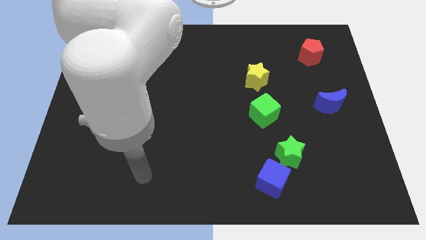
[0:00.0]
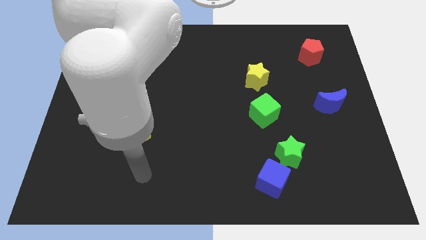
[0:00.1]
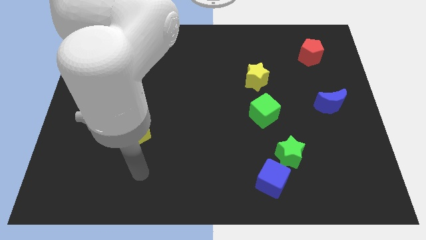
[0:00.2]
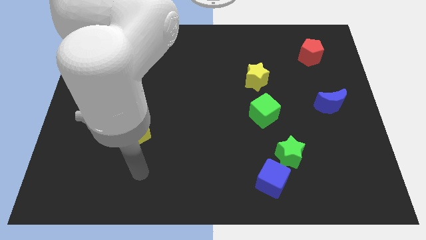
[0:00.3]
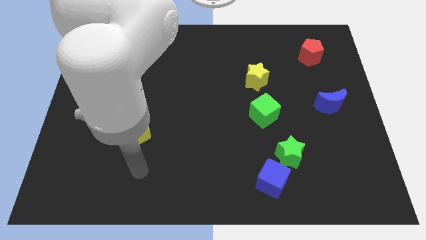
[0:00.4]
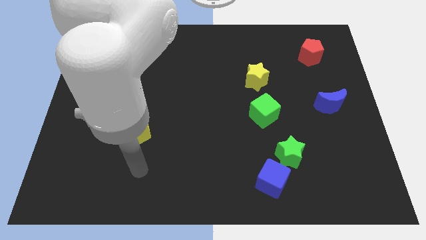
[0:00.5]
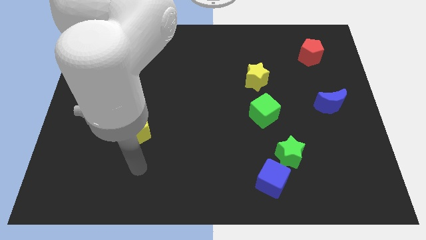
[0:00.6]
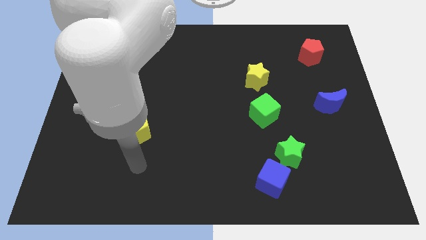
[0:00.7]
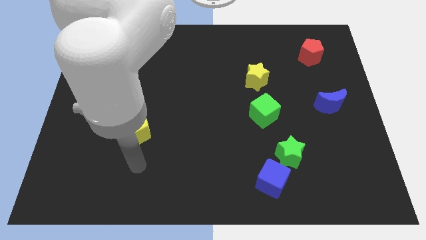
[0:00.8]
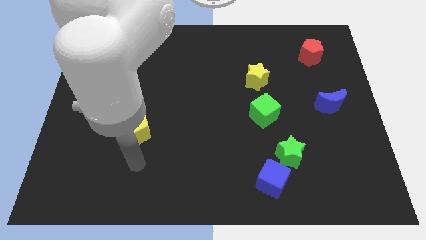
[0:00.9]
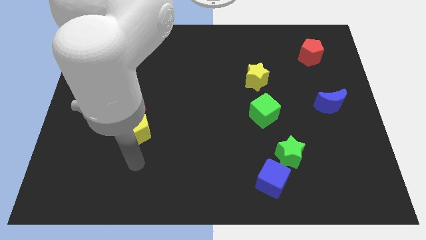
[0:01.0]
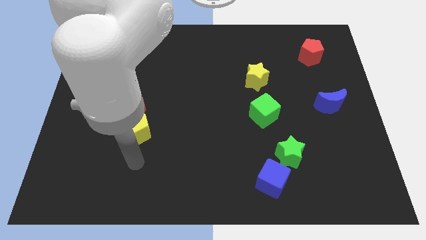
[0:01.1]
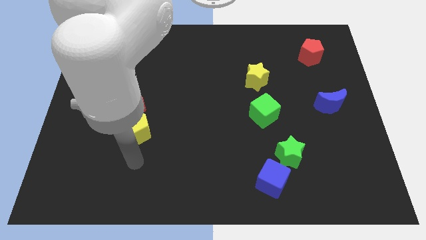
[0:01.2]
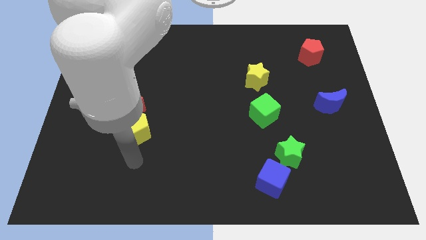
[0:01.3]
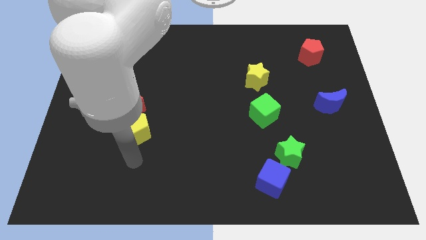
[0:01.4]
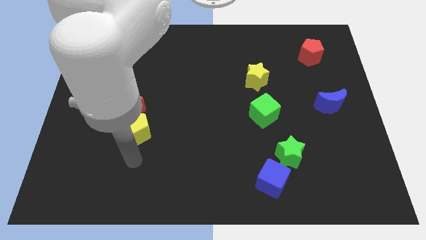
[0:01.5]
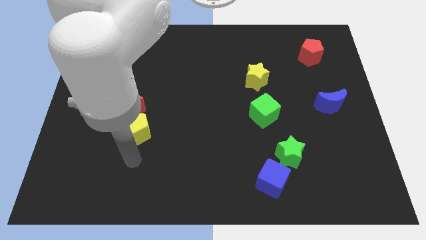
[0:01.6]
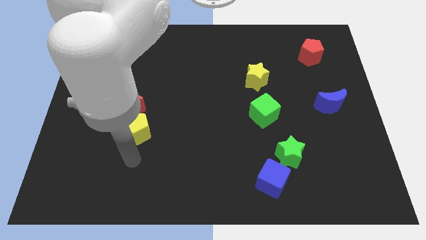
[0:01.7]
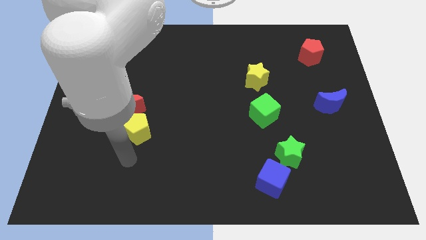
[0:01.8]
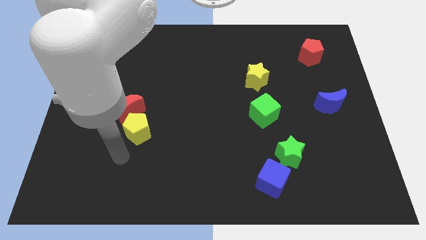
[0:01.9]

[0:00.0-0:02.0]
move the arm towards the yellow pentagon

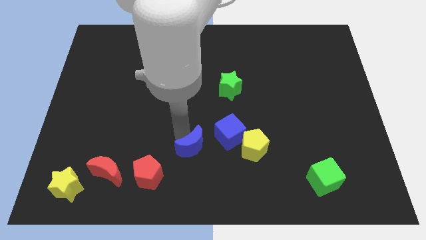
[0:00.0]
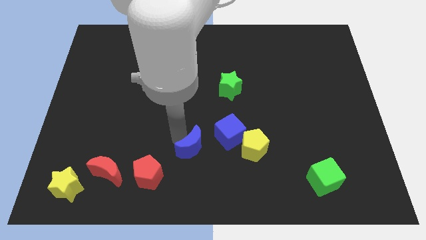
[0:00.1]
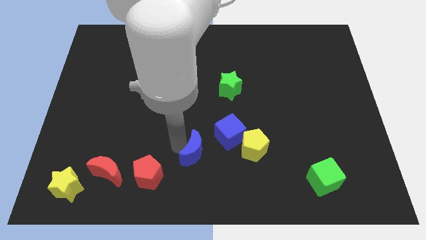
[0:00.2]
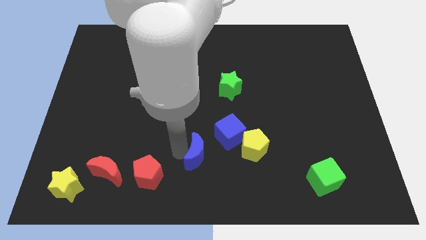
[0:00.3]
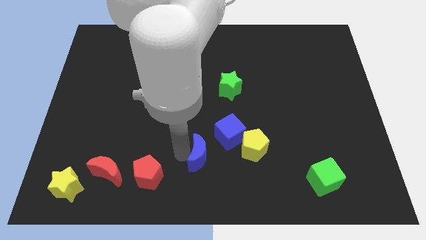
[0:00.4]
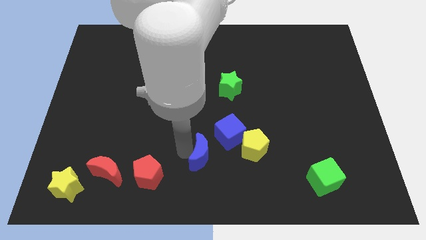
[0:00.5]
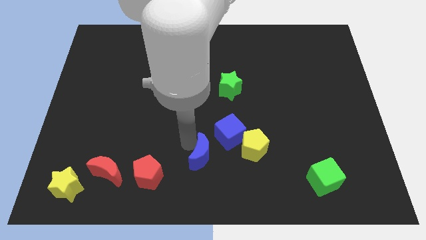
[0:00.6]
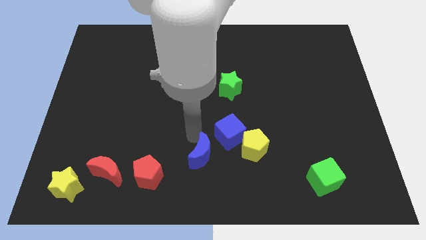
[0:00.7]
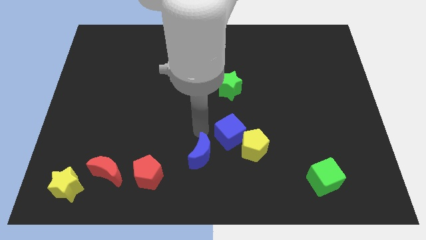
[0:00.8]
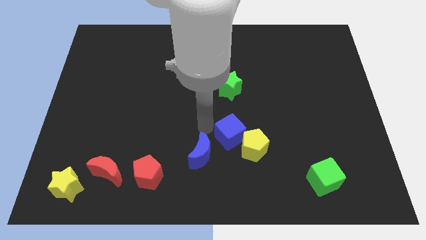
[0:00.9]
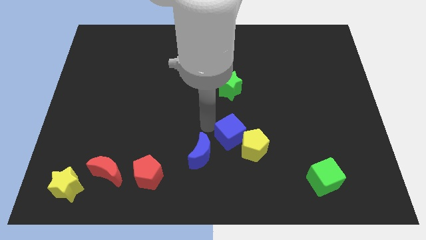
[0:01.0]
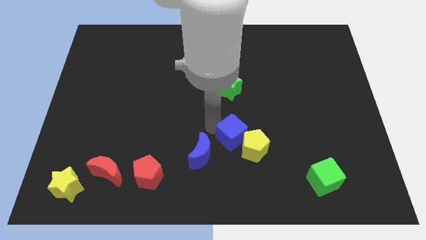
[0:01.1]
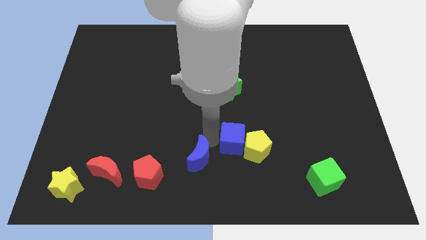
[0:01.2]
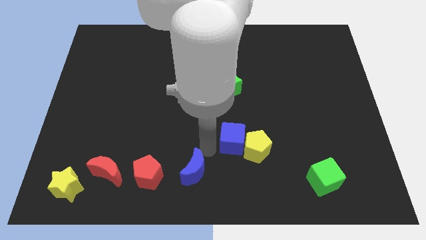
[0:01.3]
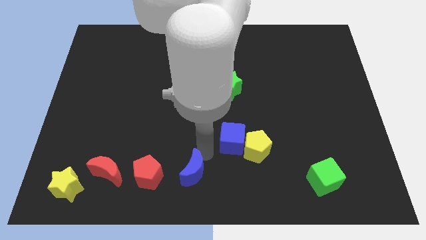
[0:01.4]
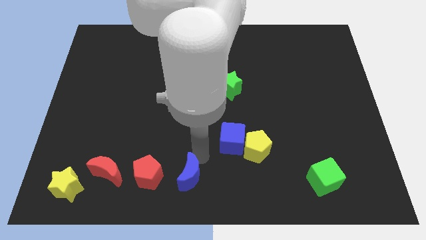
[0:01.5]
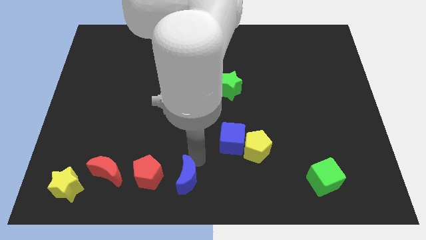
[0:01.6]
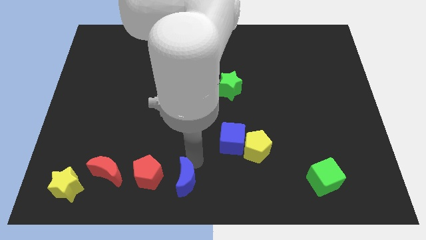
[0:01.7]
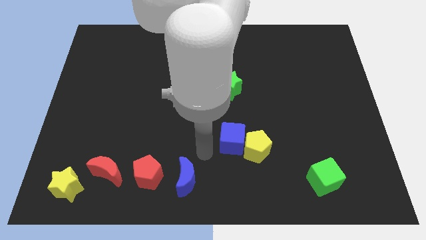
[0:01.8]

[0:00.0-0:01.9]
move the blue moon right to the red pentagon

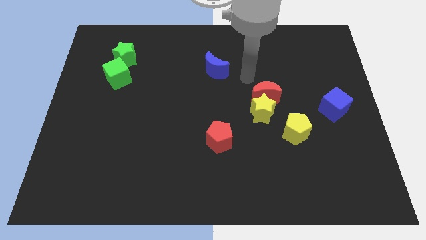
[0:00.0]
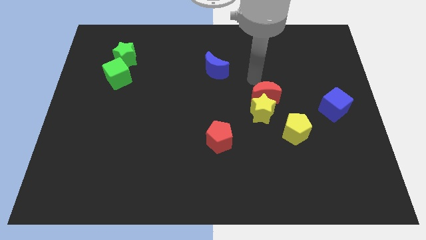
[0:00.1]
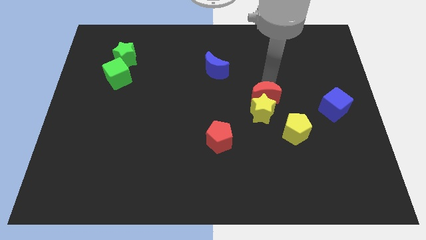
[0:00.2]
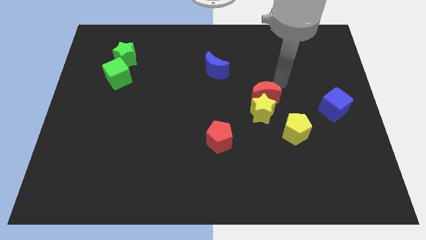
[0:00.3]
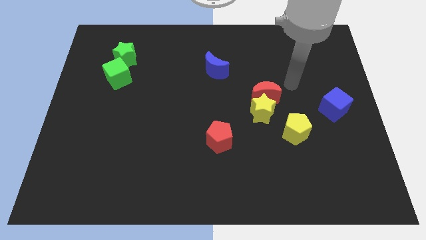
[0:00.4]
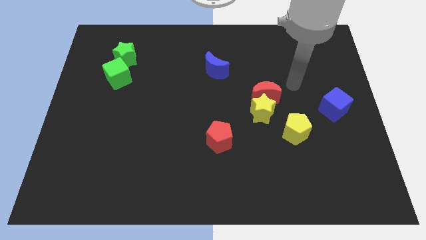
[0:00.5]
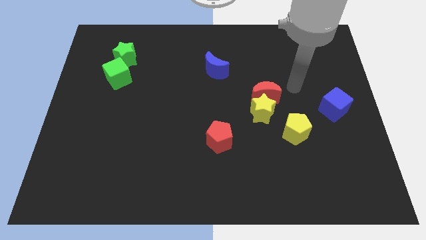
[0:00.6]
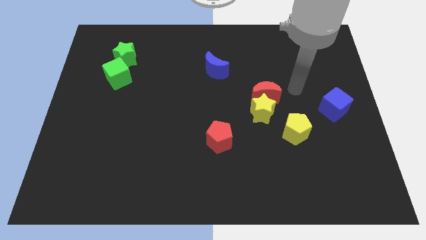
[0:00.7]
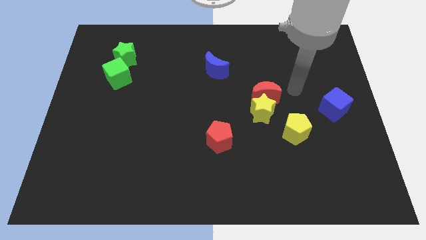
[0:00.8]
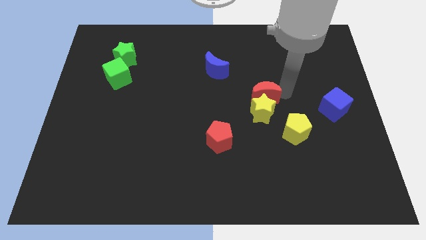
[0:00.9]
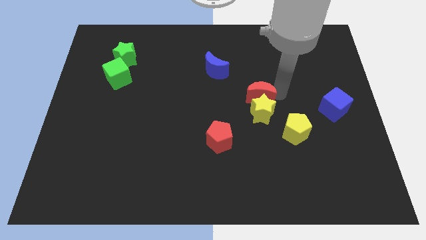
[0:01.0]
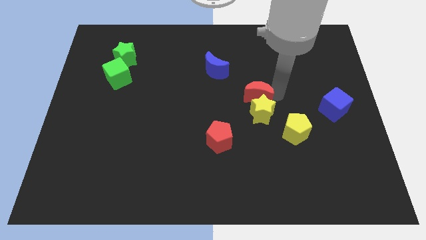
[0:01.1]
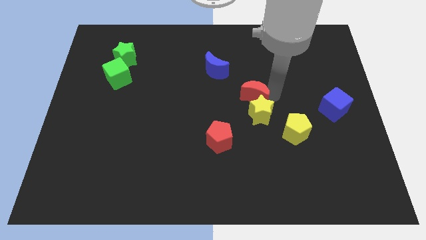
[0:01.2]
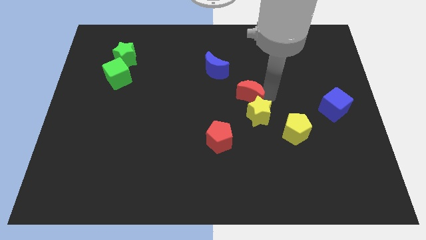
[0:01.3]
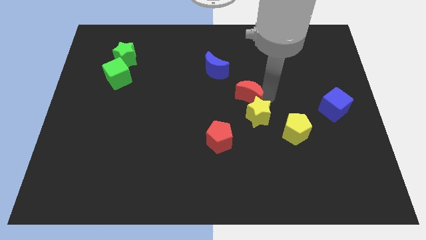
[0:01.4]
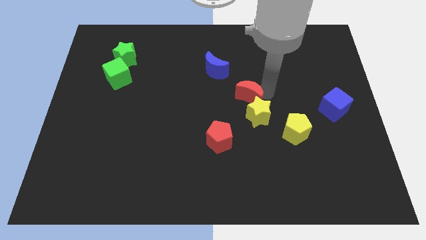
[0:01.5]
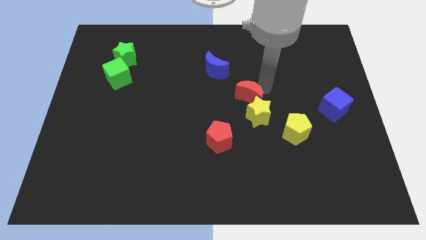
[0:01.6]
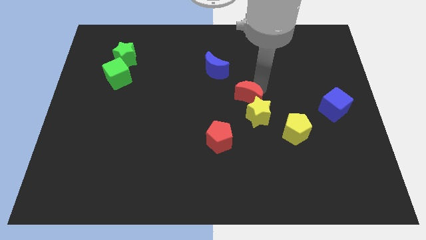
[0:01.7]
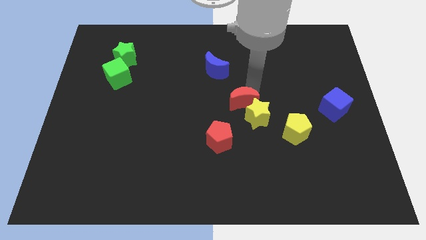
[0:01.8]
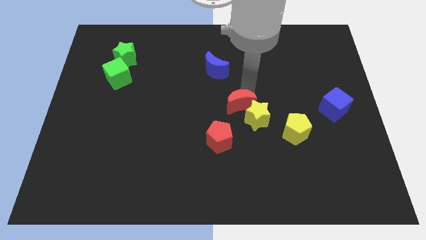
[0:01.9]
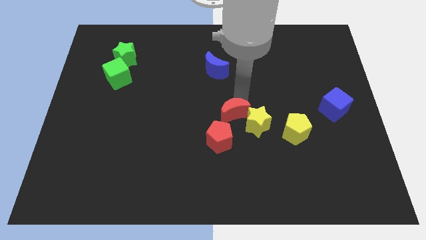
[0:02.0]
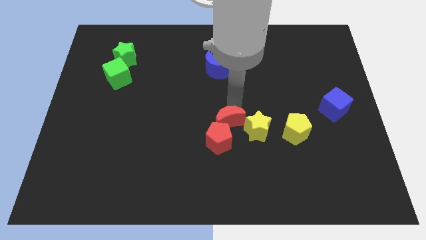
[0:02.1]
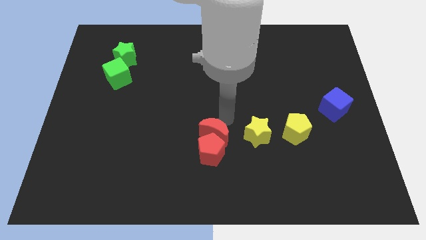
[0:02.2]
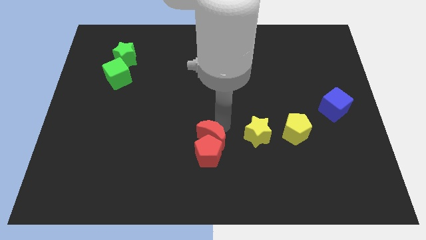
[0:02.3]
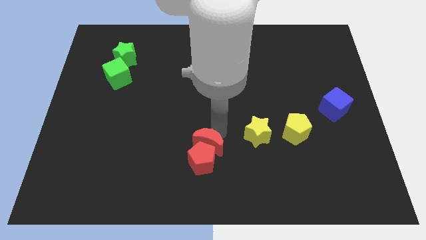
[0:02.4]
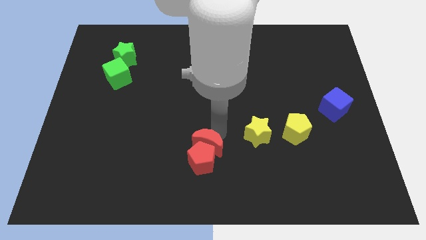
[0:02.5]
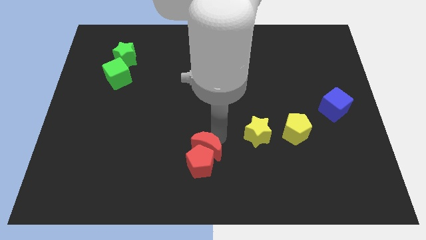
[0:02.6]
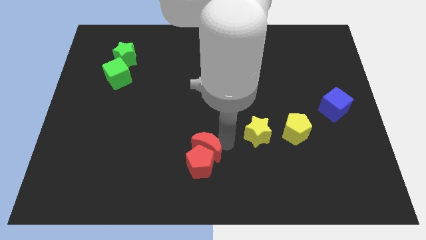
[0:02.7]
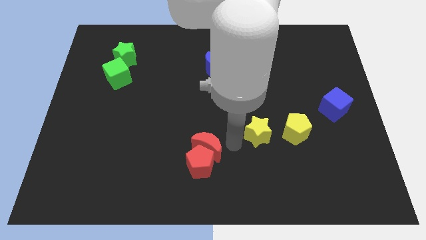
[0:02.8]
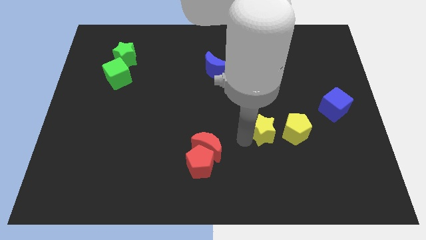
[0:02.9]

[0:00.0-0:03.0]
slightly push the red blocks towards down

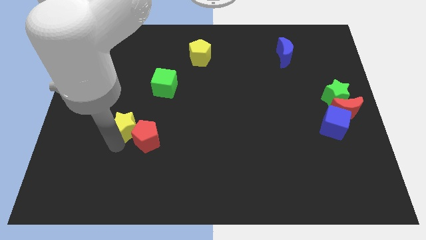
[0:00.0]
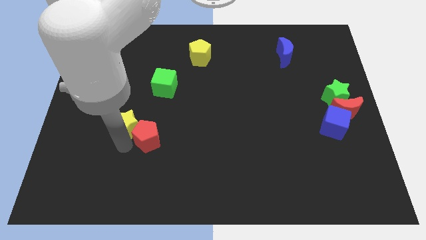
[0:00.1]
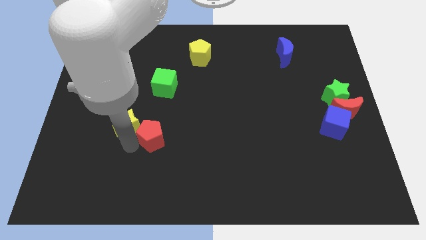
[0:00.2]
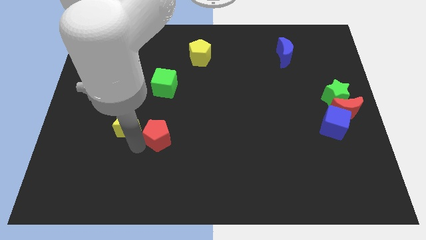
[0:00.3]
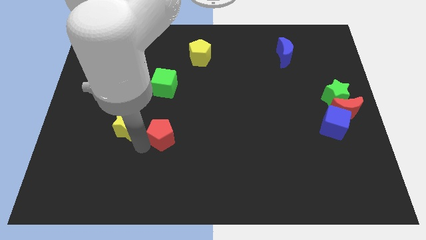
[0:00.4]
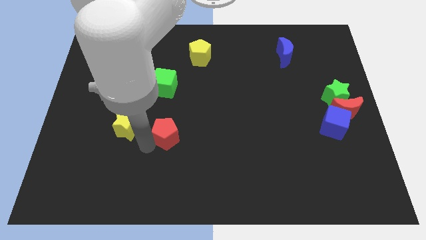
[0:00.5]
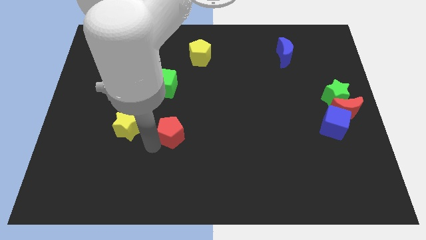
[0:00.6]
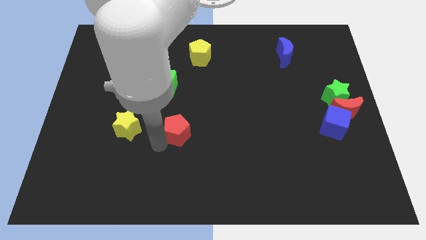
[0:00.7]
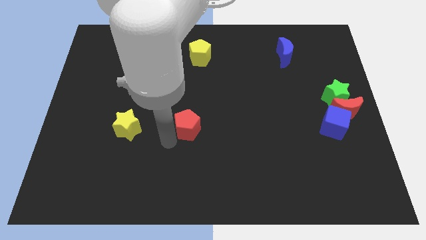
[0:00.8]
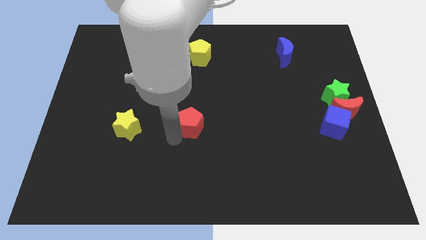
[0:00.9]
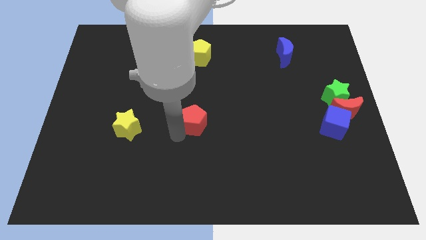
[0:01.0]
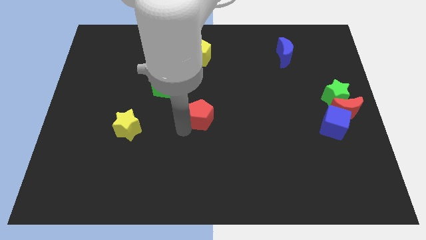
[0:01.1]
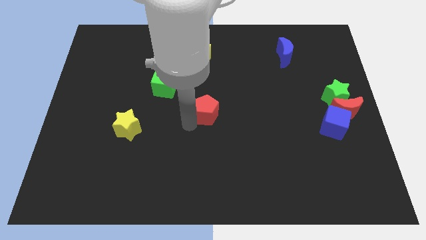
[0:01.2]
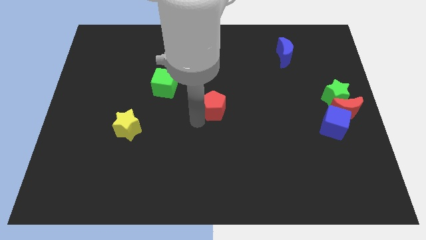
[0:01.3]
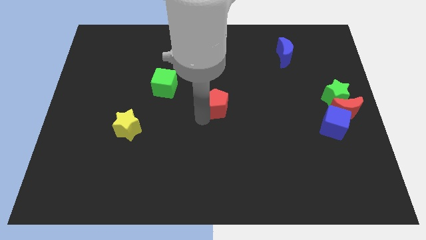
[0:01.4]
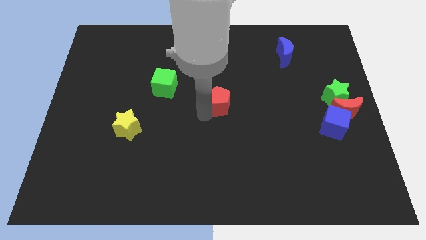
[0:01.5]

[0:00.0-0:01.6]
separate the red pentagon from the yellow star

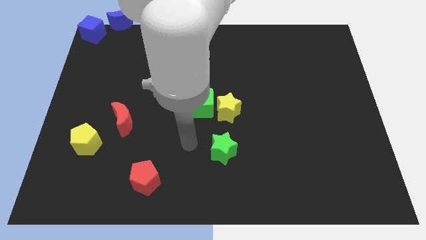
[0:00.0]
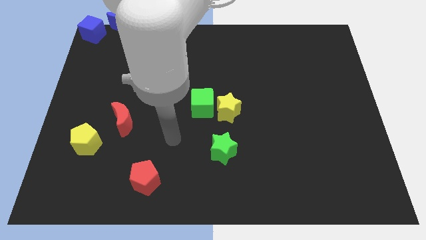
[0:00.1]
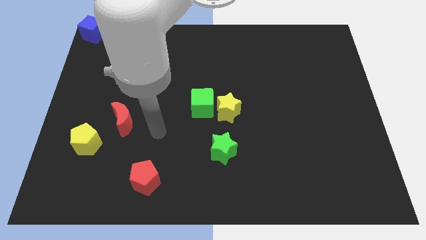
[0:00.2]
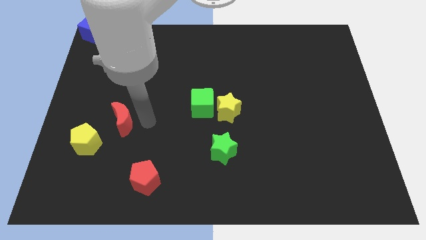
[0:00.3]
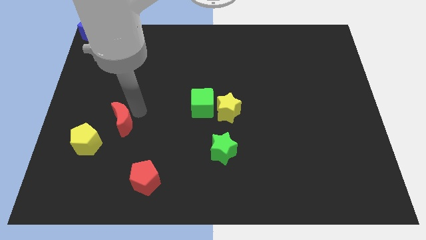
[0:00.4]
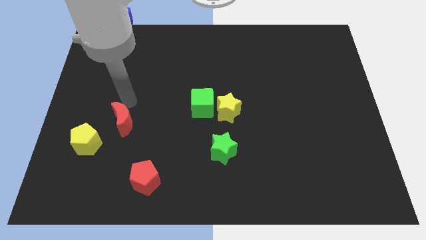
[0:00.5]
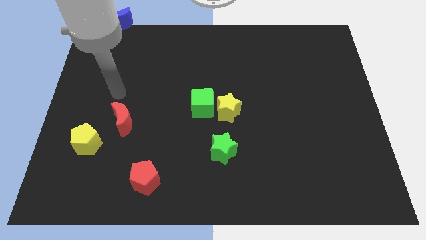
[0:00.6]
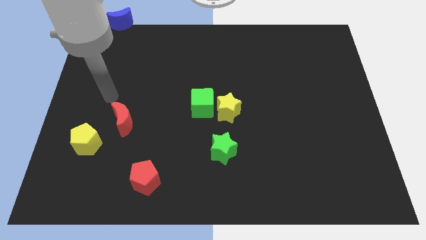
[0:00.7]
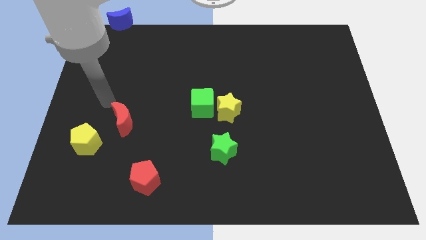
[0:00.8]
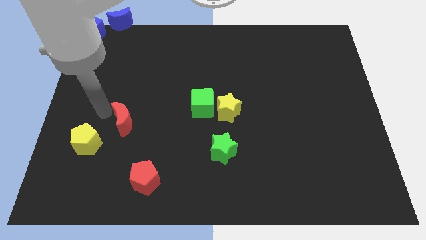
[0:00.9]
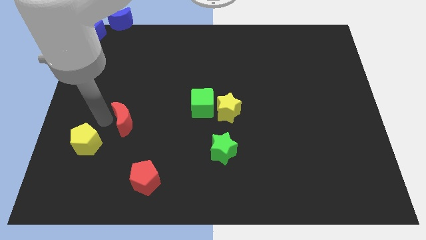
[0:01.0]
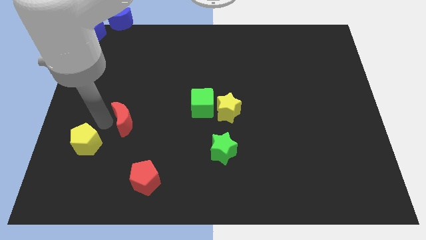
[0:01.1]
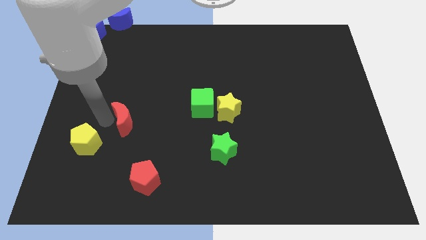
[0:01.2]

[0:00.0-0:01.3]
move your arm towards the left of red crescent
